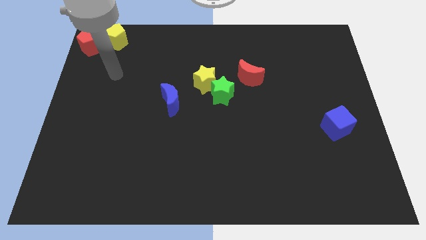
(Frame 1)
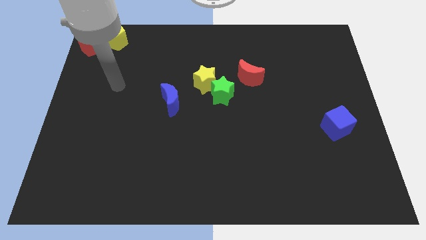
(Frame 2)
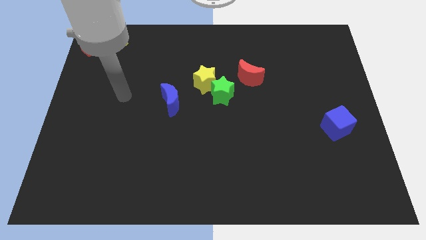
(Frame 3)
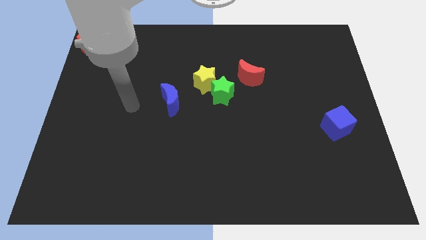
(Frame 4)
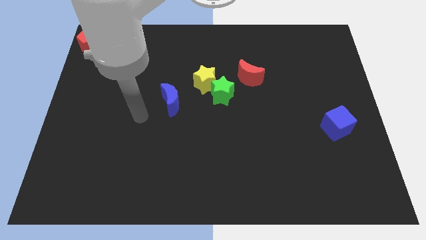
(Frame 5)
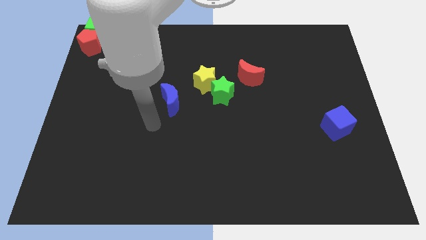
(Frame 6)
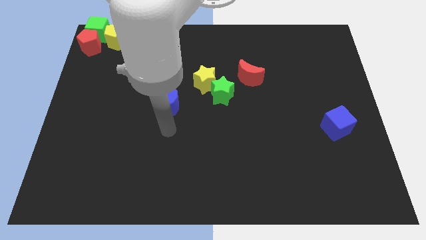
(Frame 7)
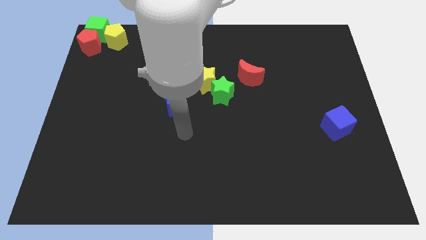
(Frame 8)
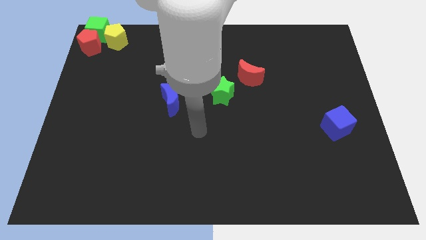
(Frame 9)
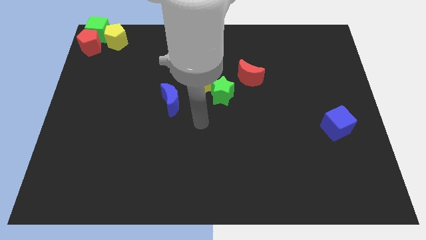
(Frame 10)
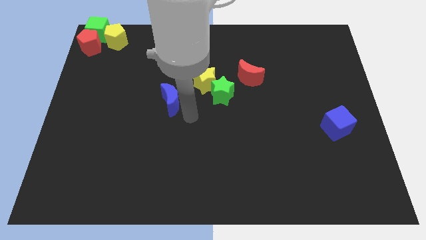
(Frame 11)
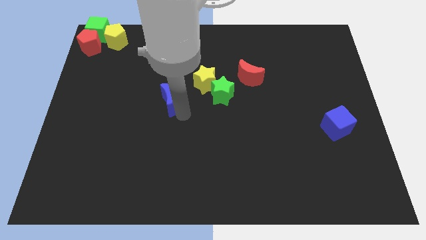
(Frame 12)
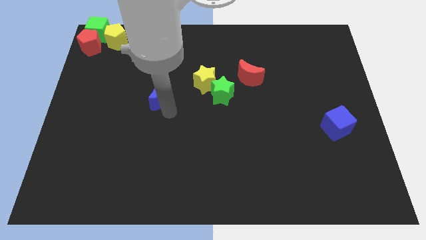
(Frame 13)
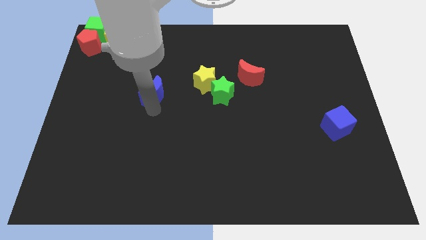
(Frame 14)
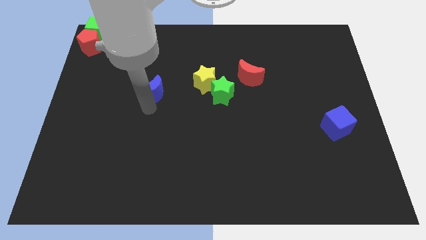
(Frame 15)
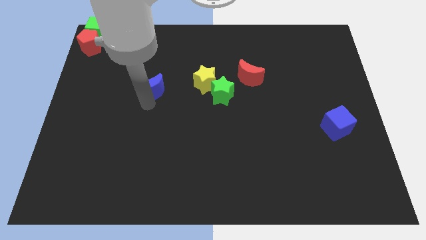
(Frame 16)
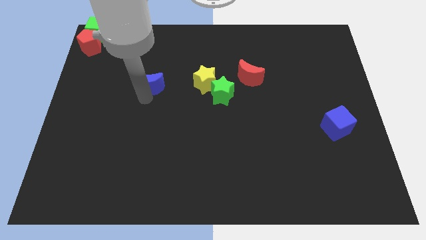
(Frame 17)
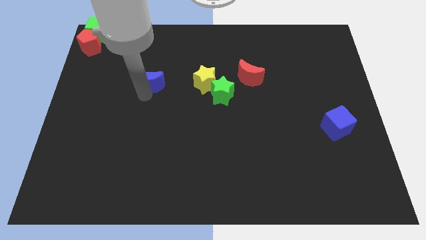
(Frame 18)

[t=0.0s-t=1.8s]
move the blue moon to the left side of the yellow star

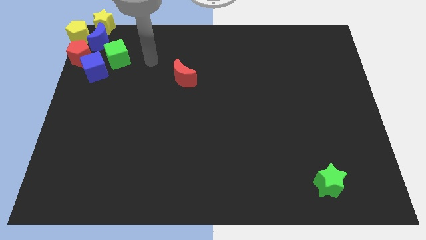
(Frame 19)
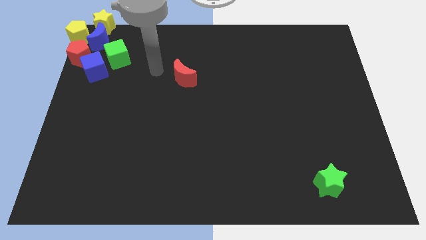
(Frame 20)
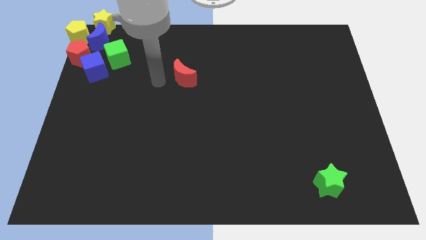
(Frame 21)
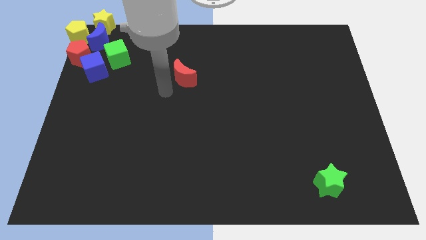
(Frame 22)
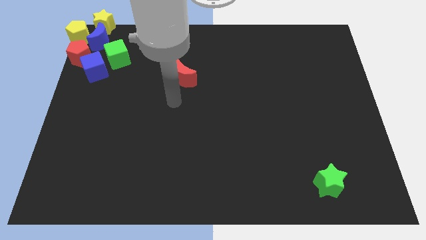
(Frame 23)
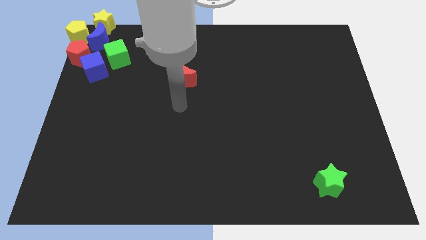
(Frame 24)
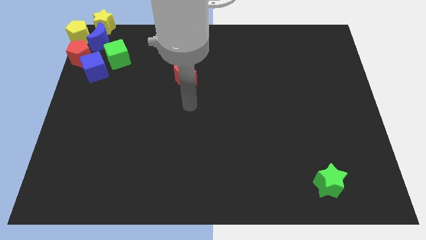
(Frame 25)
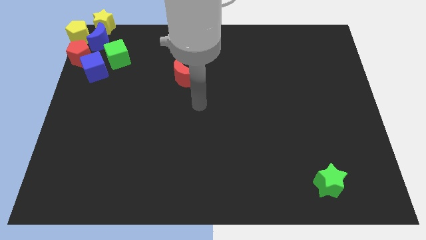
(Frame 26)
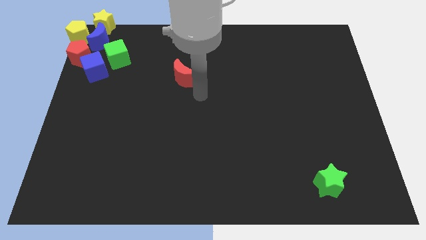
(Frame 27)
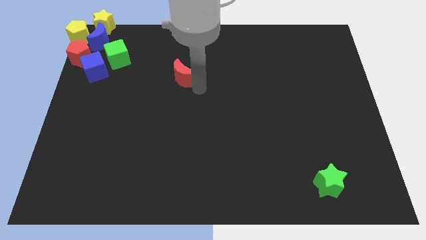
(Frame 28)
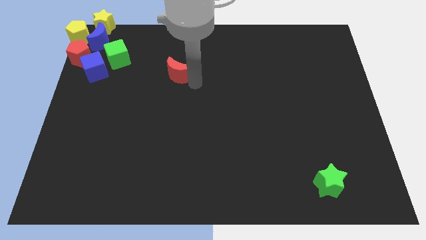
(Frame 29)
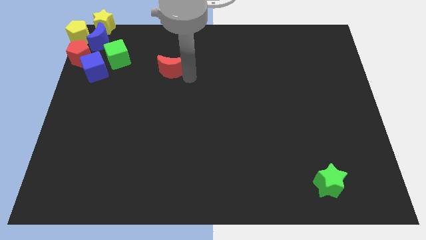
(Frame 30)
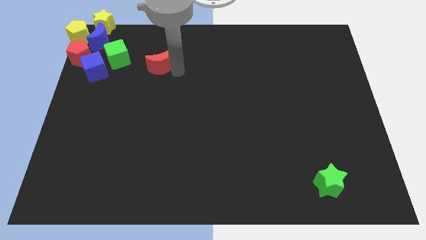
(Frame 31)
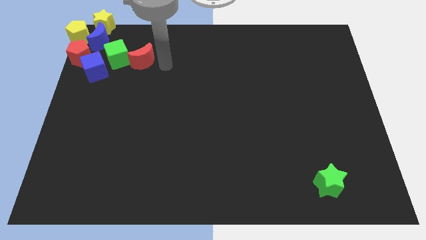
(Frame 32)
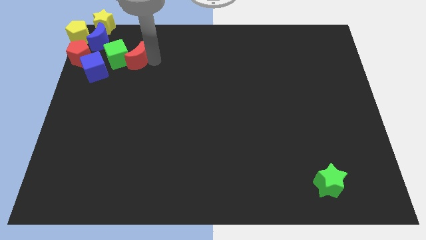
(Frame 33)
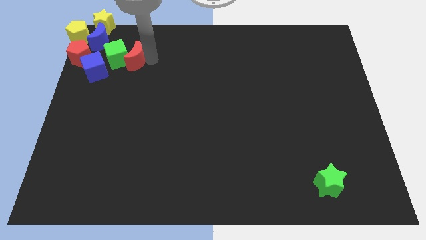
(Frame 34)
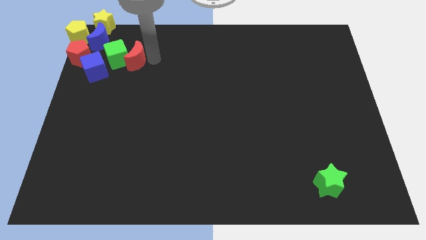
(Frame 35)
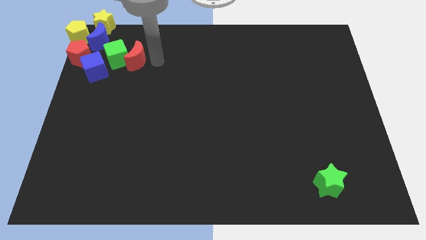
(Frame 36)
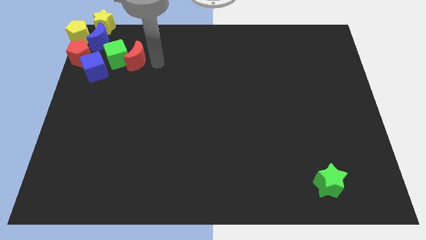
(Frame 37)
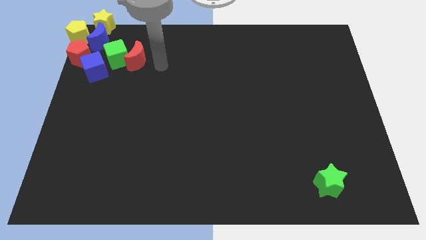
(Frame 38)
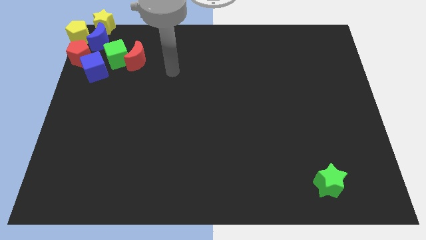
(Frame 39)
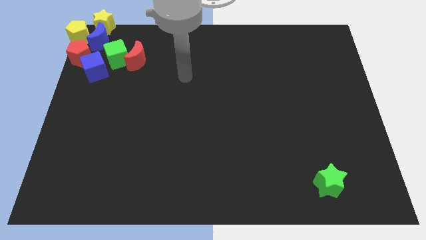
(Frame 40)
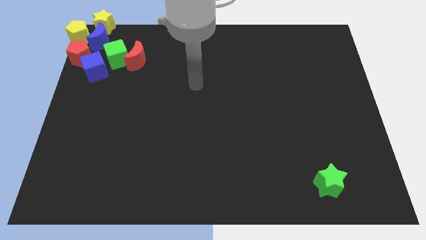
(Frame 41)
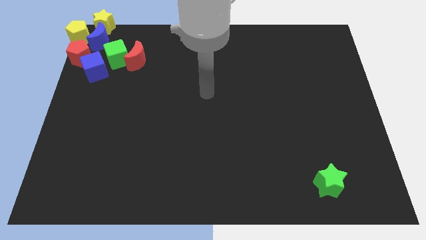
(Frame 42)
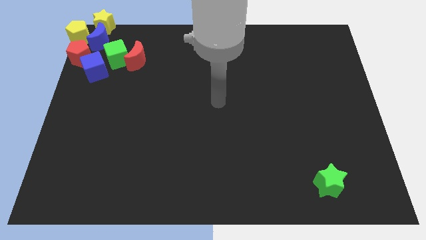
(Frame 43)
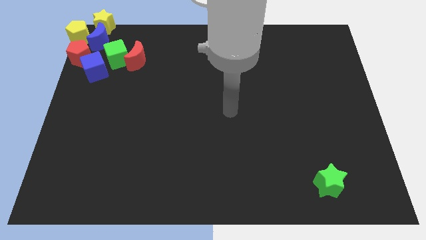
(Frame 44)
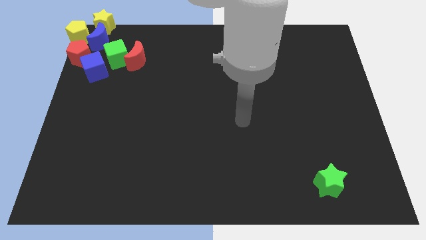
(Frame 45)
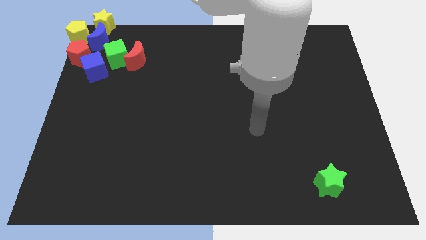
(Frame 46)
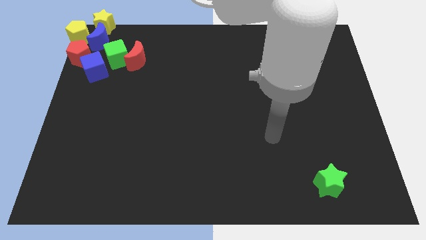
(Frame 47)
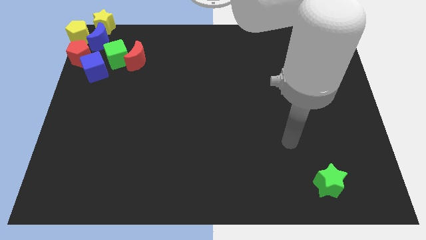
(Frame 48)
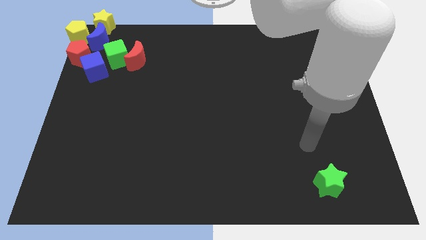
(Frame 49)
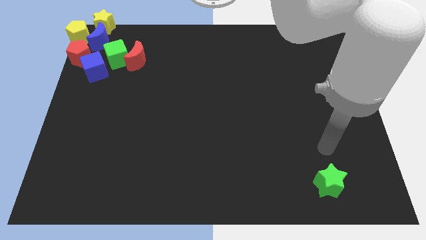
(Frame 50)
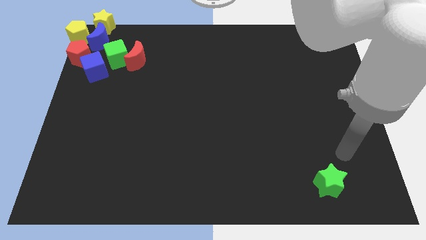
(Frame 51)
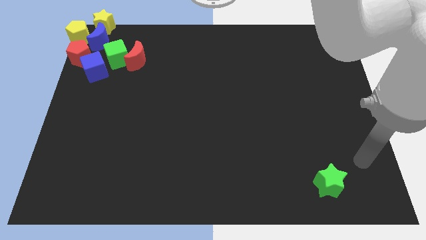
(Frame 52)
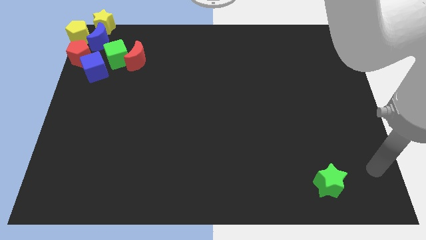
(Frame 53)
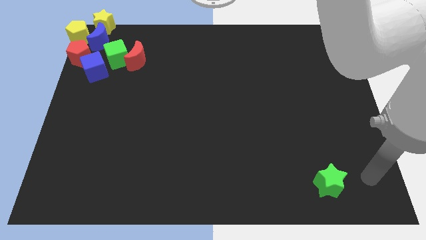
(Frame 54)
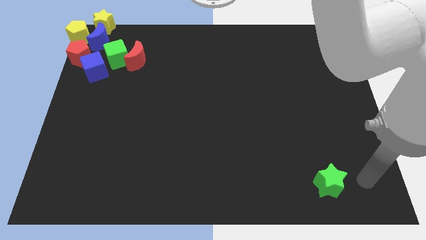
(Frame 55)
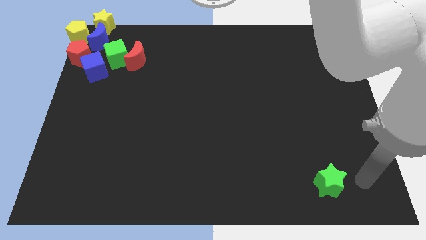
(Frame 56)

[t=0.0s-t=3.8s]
push the red crescent to the right of the green cube

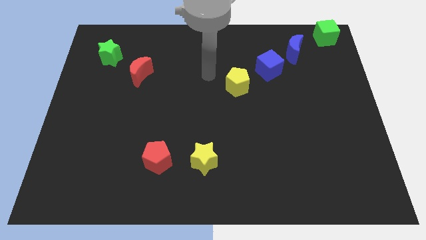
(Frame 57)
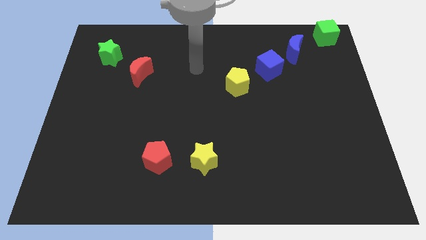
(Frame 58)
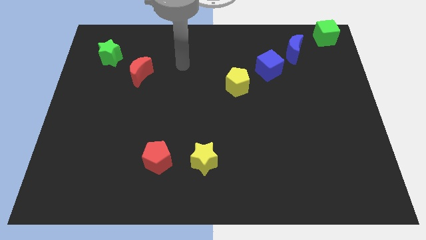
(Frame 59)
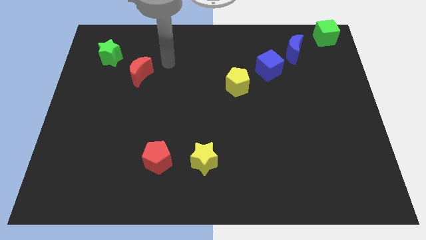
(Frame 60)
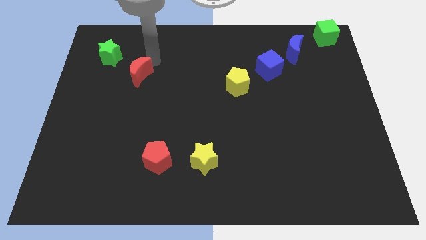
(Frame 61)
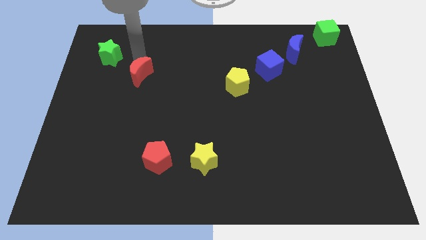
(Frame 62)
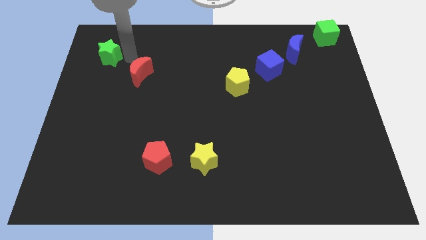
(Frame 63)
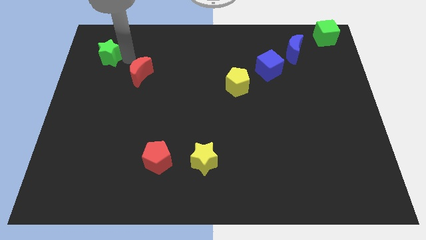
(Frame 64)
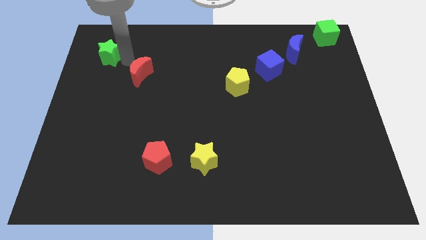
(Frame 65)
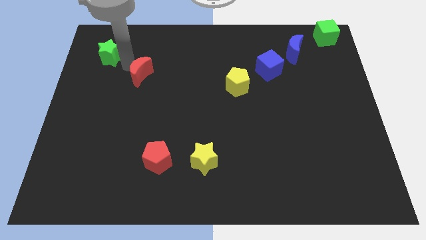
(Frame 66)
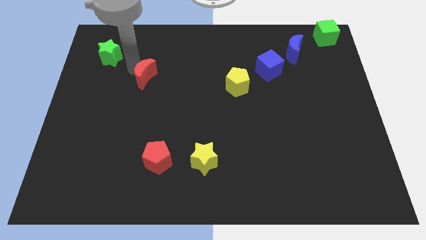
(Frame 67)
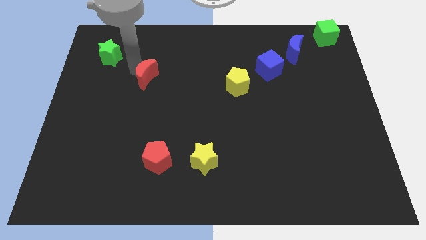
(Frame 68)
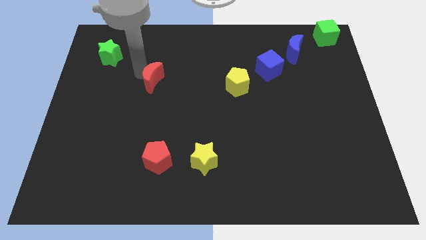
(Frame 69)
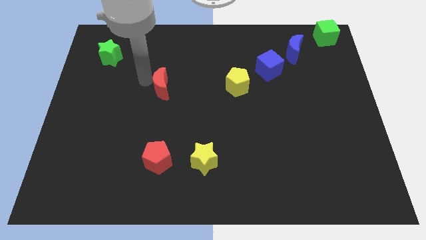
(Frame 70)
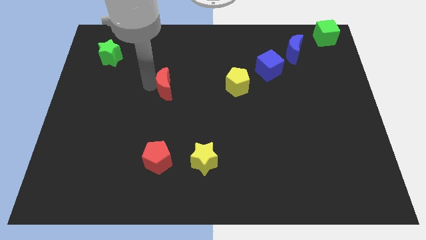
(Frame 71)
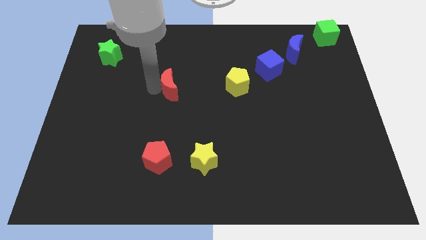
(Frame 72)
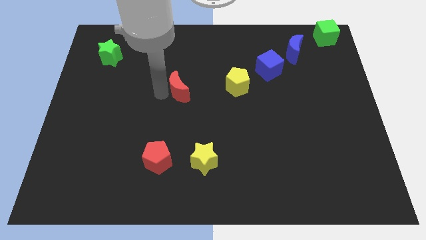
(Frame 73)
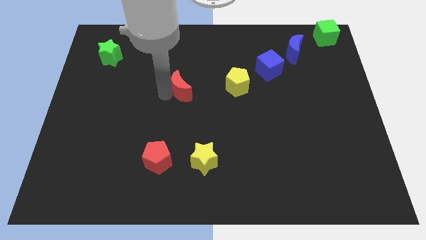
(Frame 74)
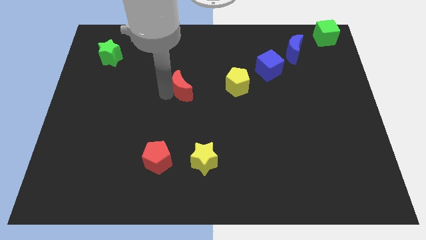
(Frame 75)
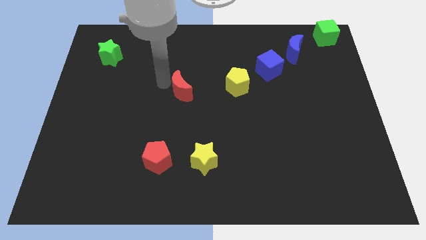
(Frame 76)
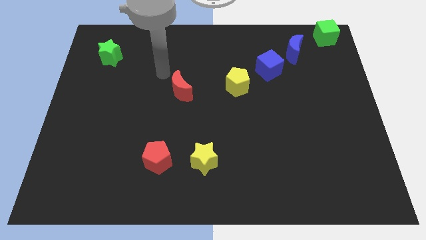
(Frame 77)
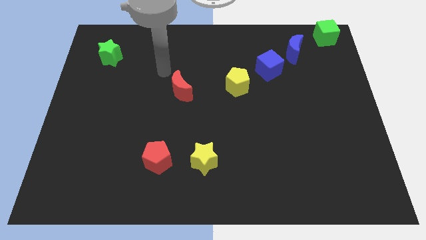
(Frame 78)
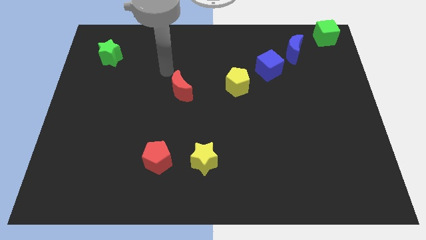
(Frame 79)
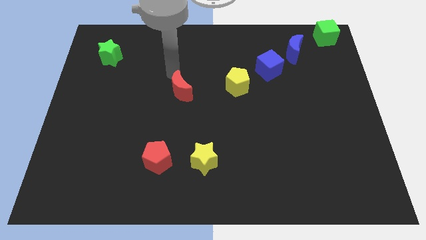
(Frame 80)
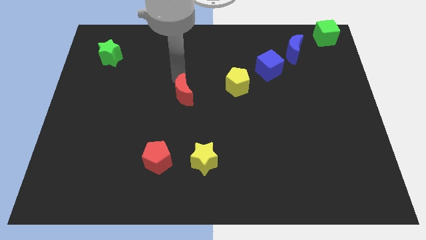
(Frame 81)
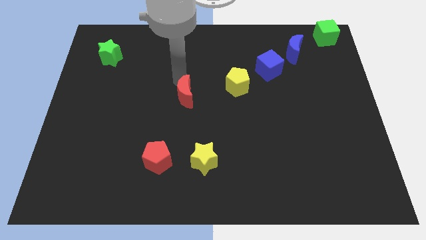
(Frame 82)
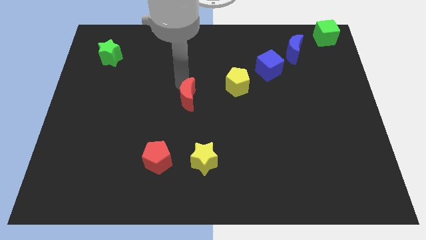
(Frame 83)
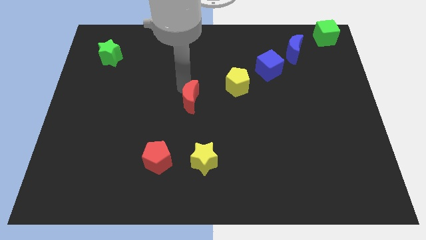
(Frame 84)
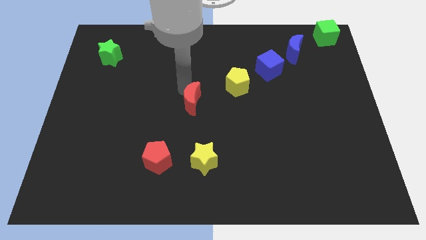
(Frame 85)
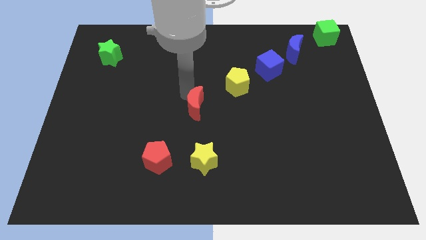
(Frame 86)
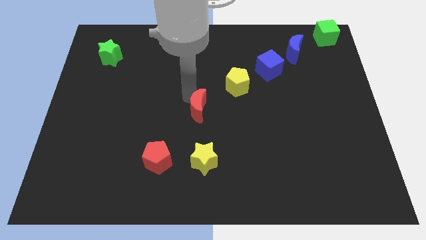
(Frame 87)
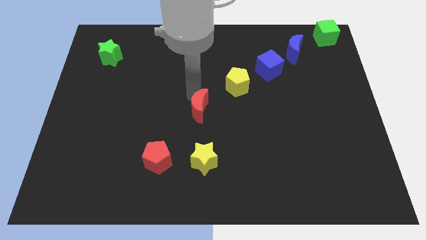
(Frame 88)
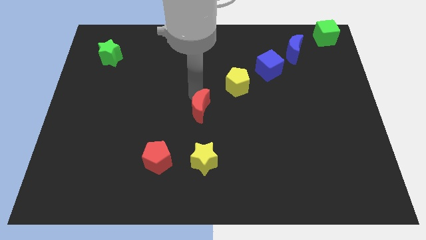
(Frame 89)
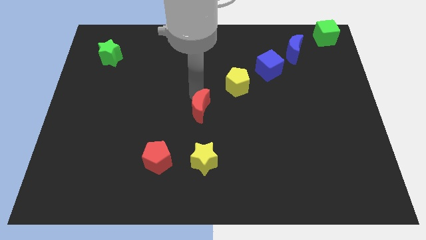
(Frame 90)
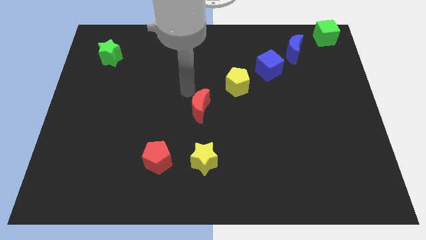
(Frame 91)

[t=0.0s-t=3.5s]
push the red crescent vertically above the yellow star
